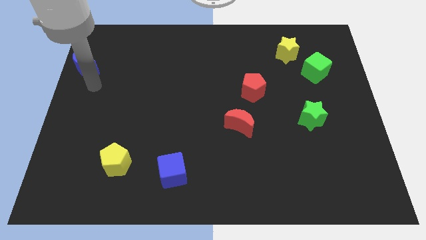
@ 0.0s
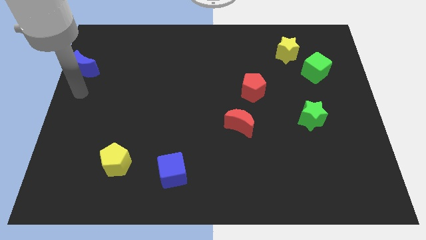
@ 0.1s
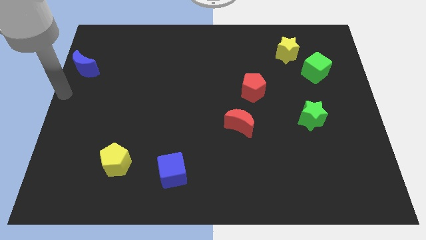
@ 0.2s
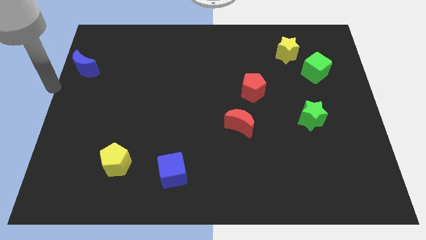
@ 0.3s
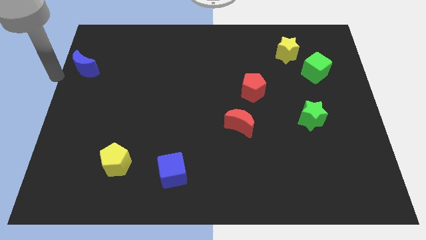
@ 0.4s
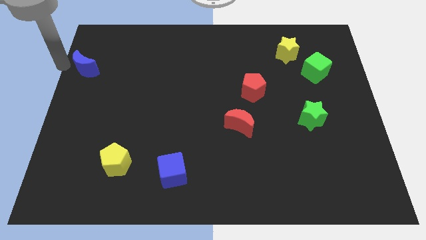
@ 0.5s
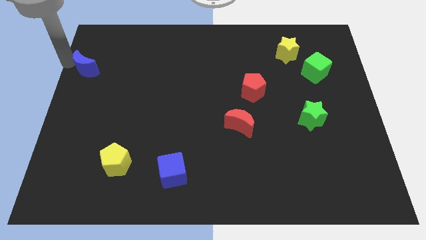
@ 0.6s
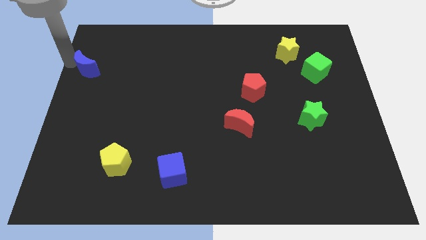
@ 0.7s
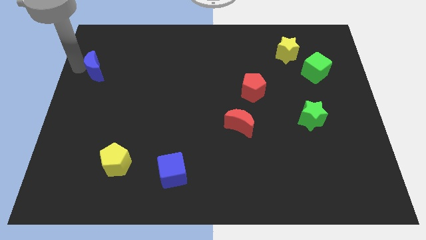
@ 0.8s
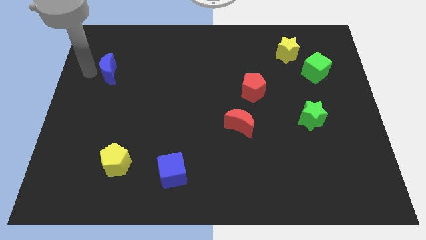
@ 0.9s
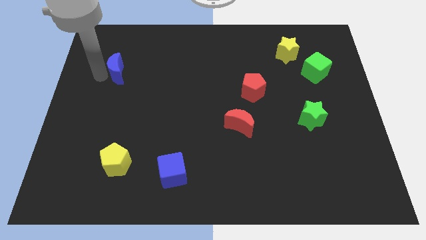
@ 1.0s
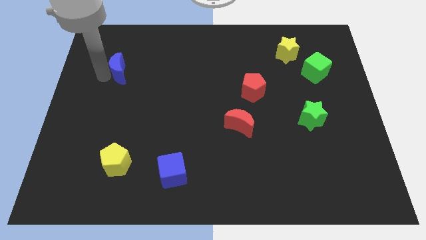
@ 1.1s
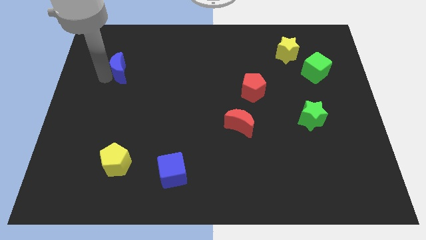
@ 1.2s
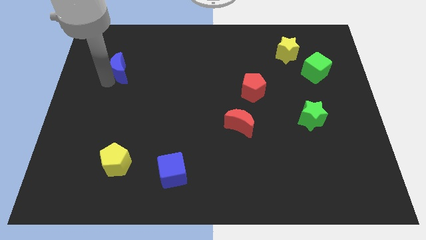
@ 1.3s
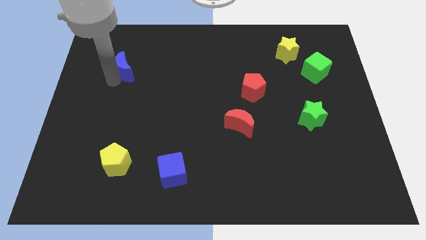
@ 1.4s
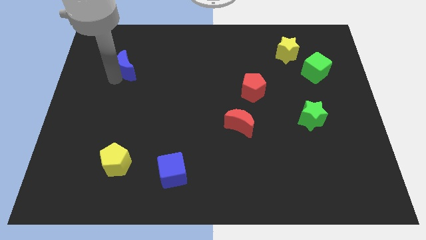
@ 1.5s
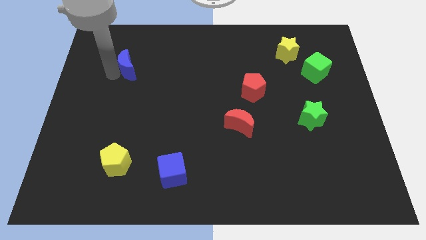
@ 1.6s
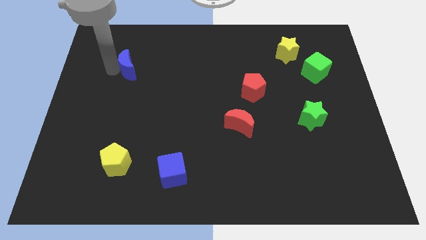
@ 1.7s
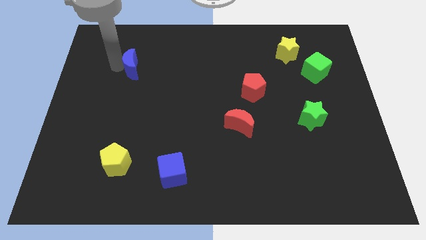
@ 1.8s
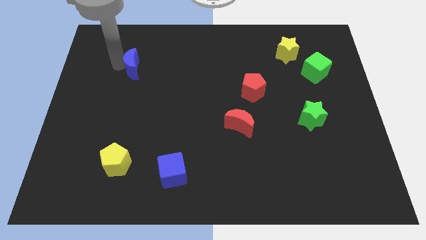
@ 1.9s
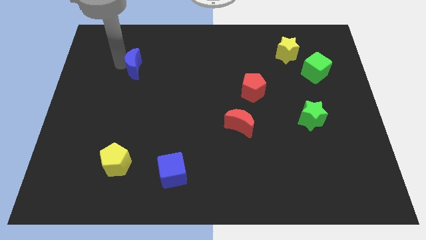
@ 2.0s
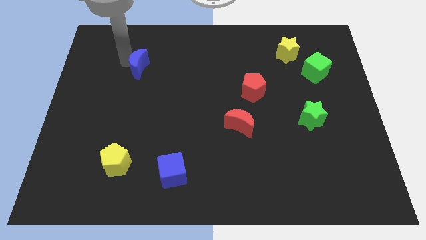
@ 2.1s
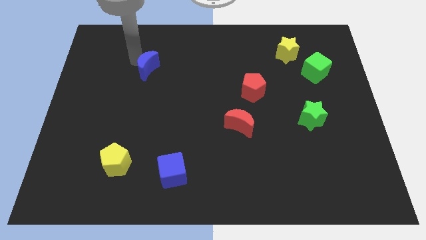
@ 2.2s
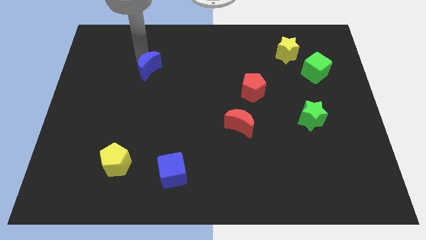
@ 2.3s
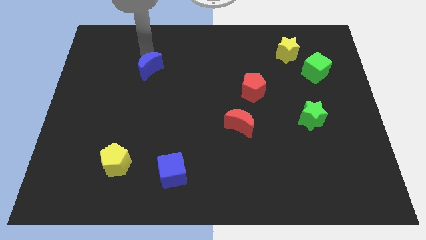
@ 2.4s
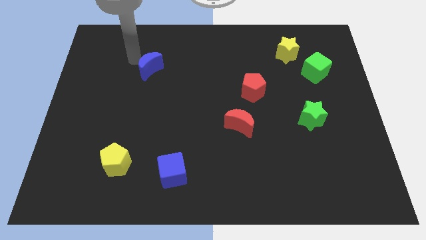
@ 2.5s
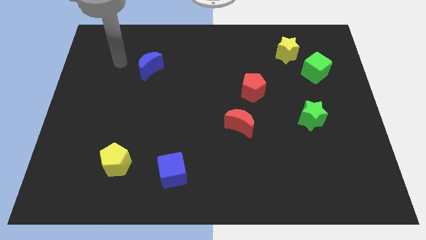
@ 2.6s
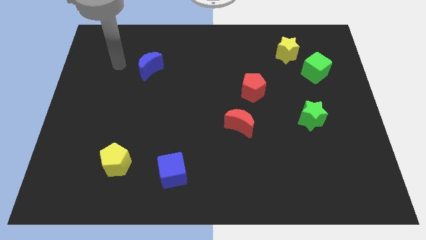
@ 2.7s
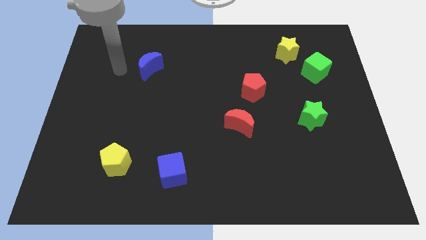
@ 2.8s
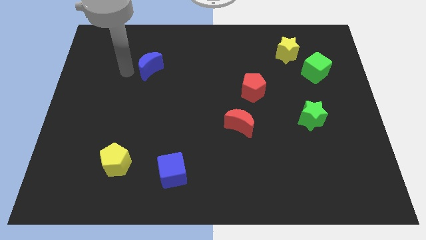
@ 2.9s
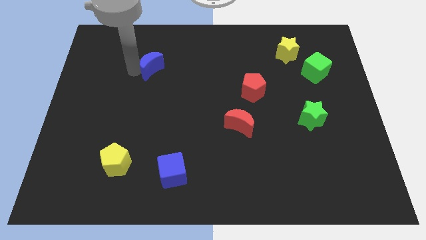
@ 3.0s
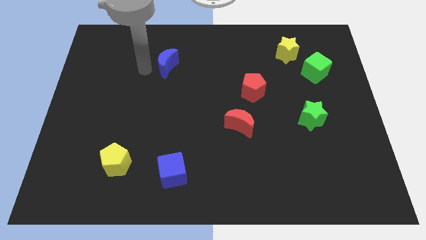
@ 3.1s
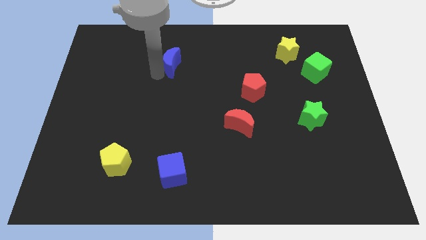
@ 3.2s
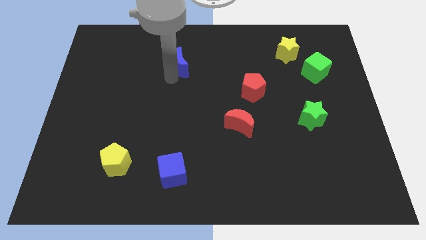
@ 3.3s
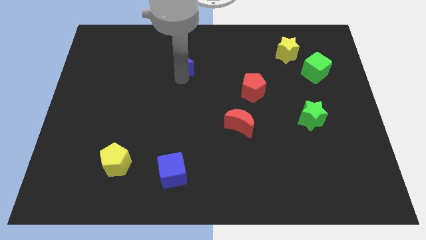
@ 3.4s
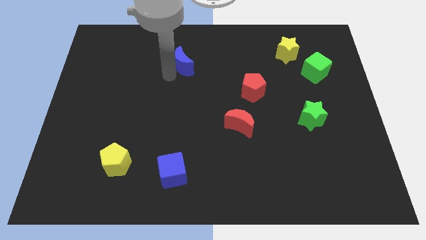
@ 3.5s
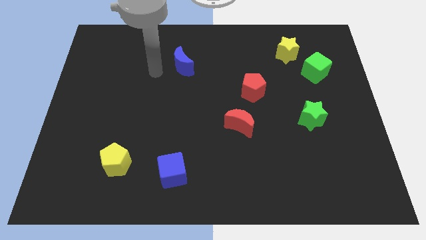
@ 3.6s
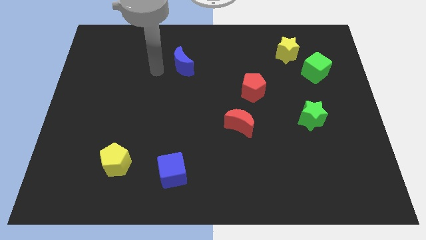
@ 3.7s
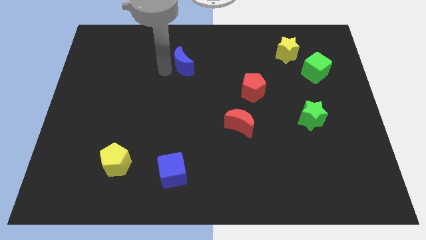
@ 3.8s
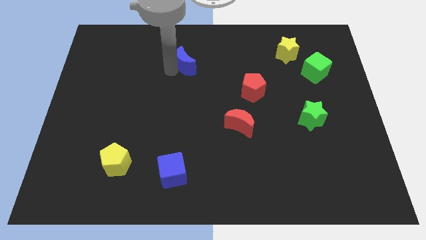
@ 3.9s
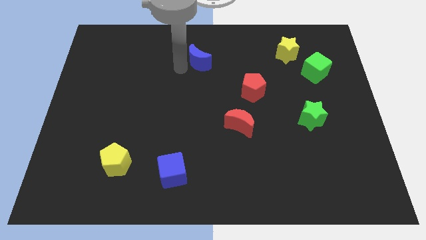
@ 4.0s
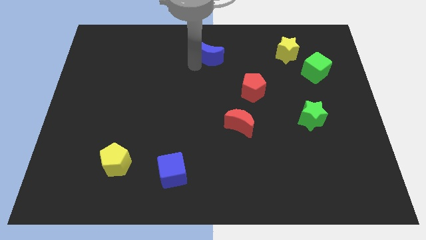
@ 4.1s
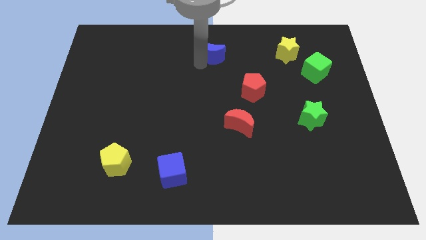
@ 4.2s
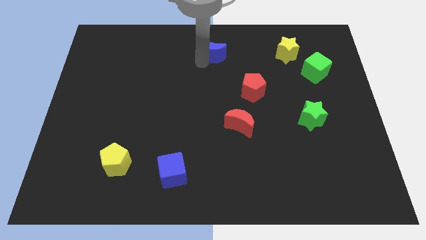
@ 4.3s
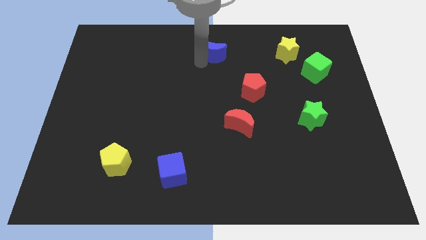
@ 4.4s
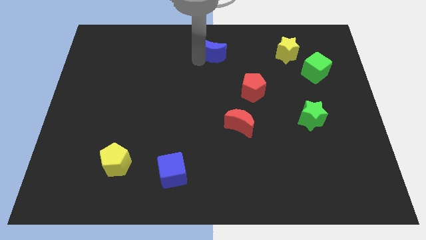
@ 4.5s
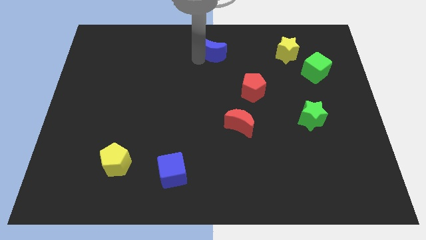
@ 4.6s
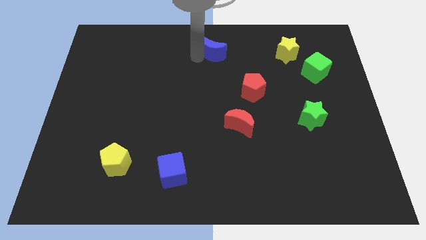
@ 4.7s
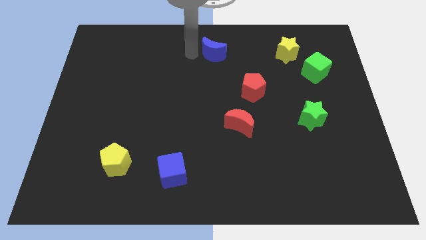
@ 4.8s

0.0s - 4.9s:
place the blue moon diagonally top left to the red pentagon

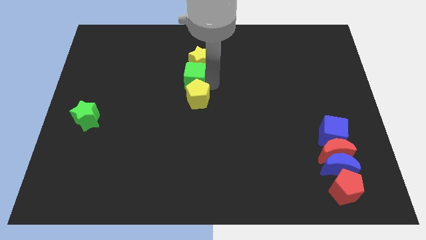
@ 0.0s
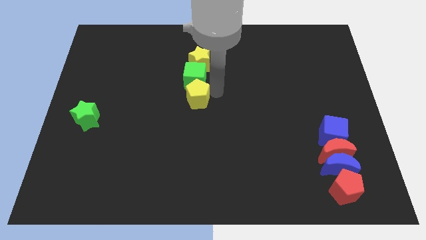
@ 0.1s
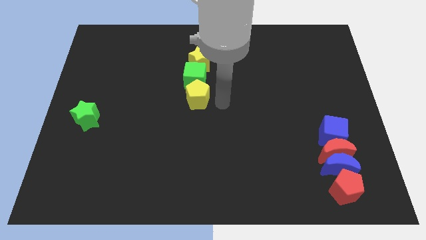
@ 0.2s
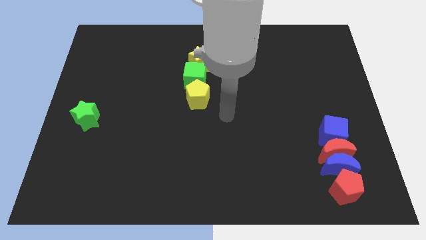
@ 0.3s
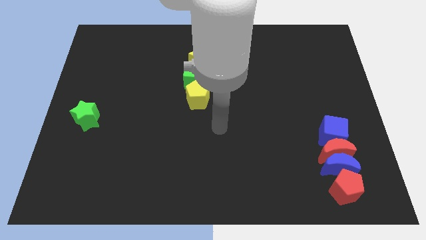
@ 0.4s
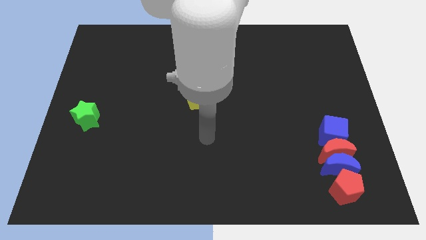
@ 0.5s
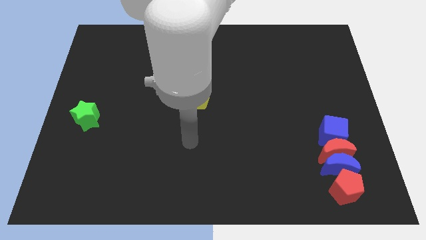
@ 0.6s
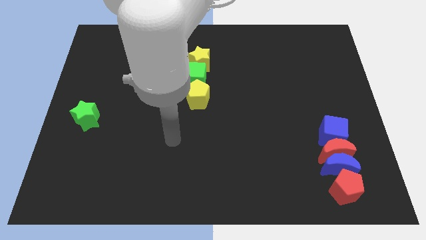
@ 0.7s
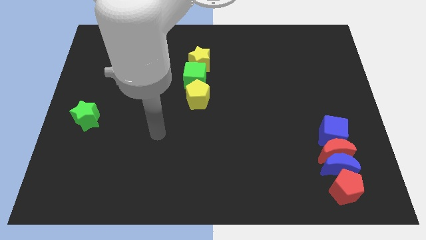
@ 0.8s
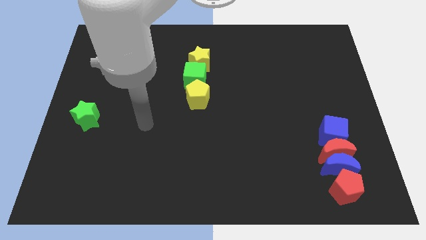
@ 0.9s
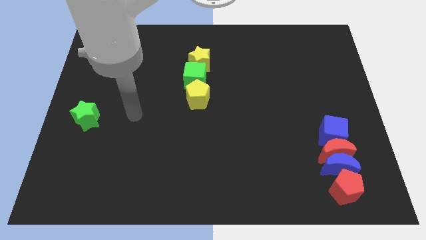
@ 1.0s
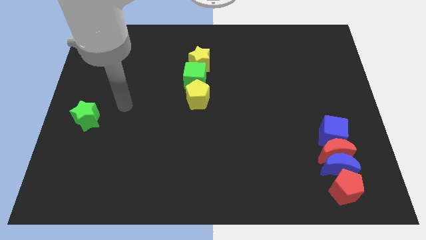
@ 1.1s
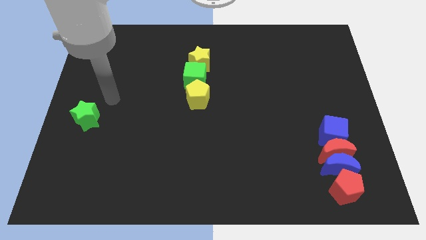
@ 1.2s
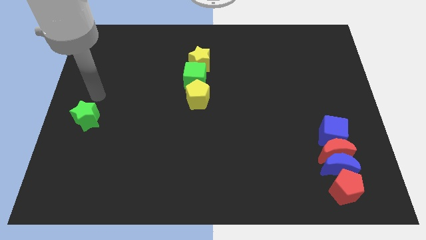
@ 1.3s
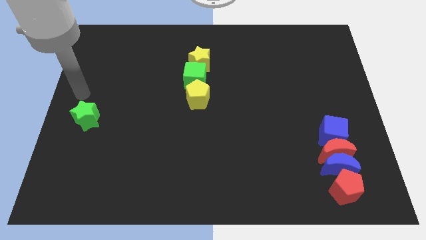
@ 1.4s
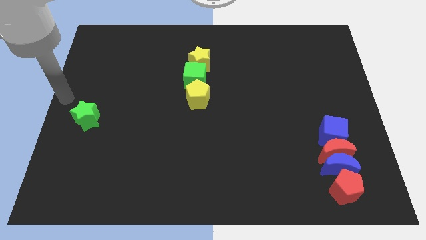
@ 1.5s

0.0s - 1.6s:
move your arm away form the green cube

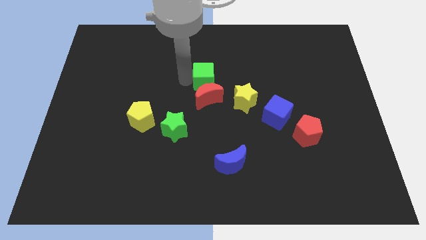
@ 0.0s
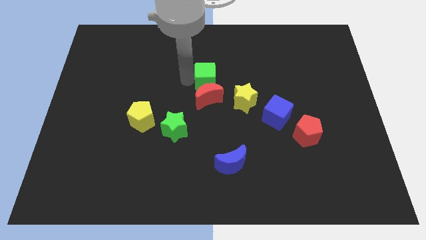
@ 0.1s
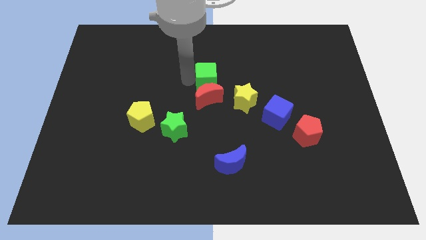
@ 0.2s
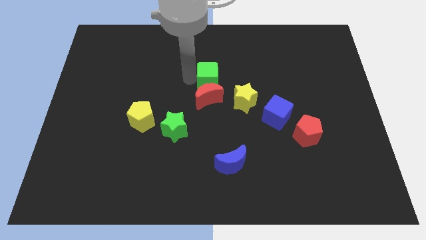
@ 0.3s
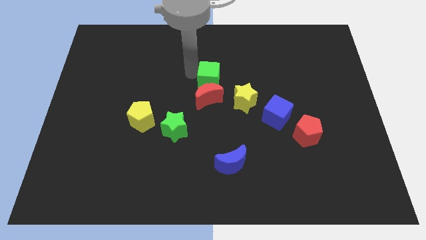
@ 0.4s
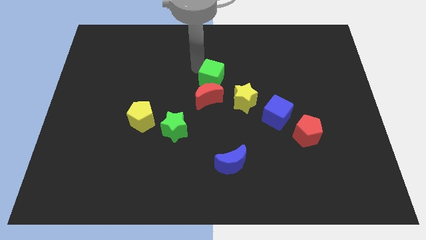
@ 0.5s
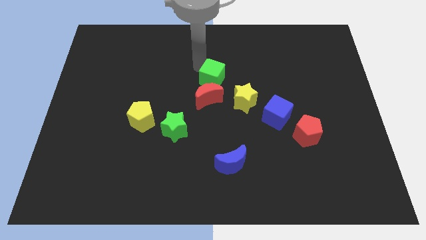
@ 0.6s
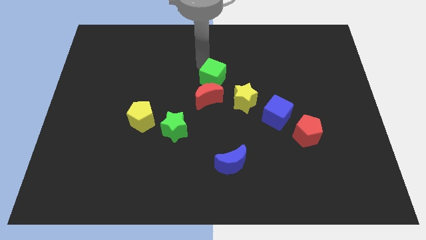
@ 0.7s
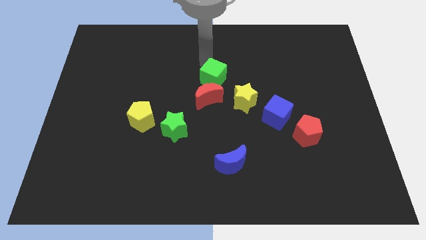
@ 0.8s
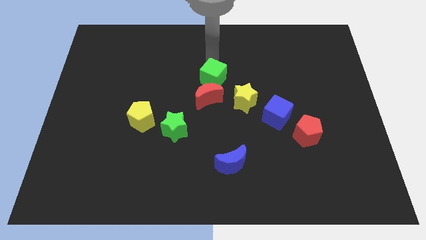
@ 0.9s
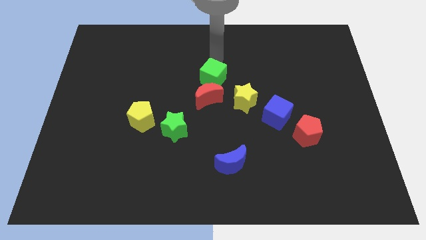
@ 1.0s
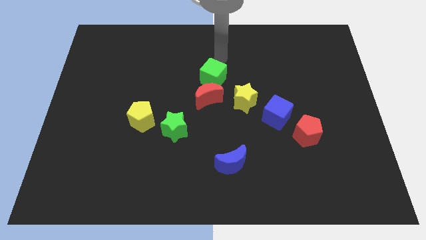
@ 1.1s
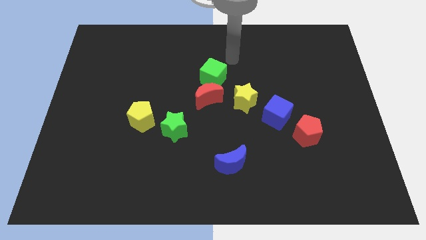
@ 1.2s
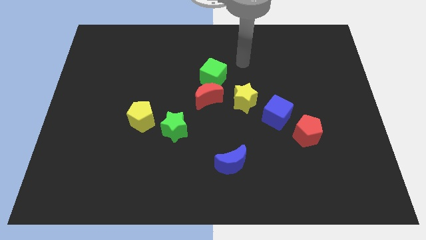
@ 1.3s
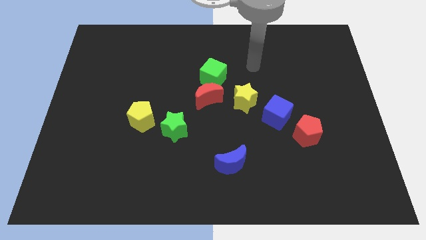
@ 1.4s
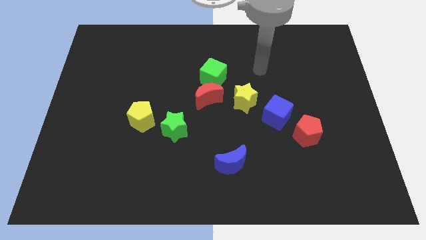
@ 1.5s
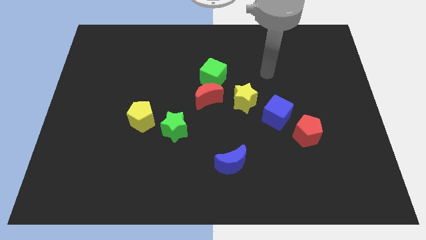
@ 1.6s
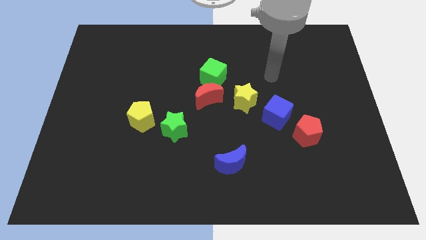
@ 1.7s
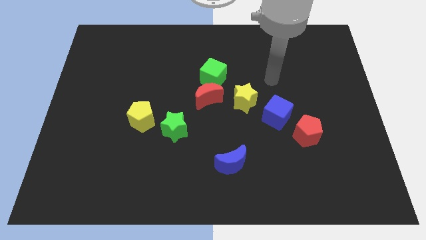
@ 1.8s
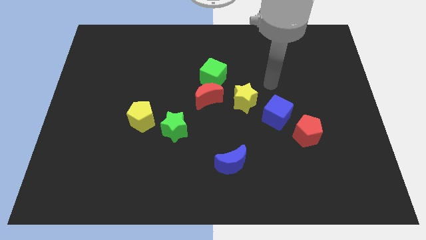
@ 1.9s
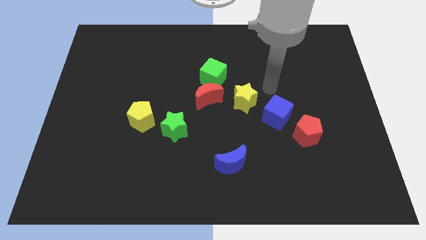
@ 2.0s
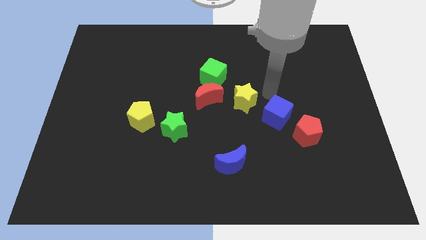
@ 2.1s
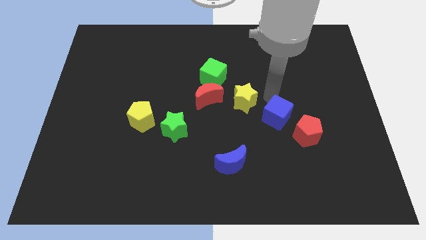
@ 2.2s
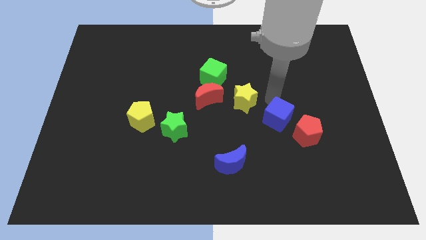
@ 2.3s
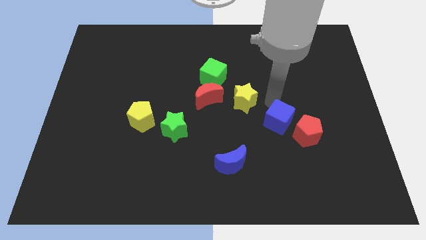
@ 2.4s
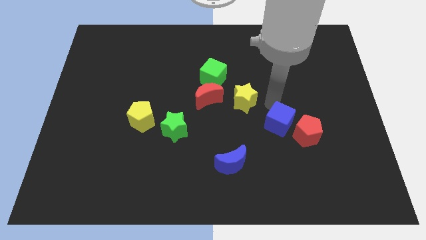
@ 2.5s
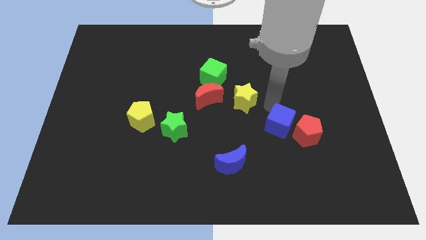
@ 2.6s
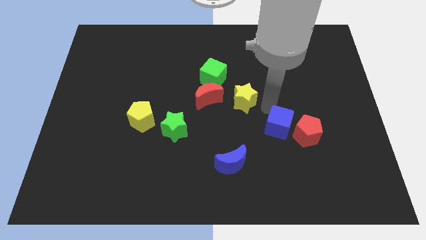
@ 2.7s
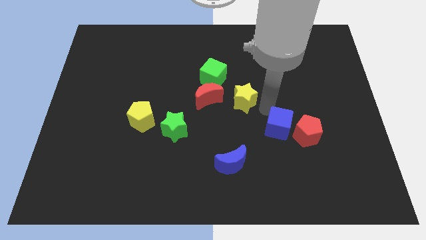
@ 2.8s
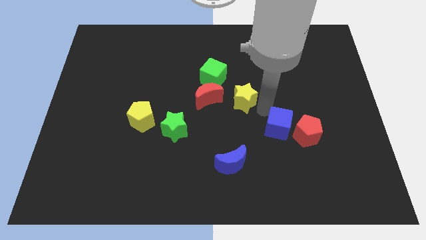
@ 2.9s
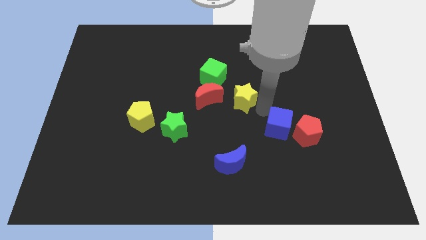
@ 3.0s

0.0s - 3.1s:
push the blue cube towards the red pentagon
